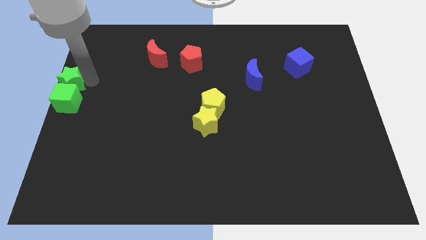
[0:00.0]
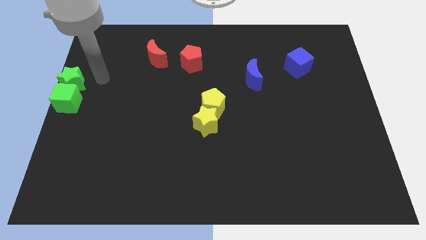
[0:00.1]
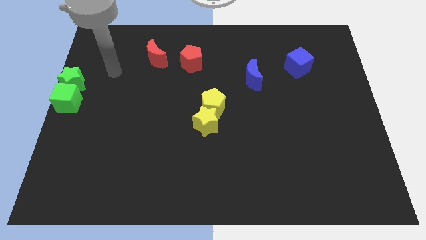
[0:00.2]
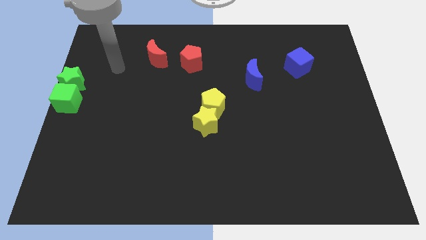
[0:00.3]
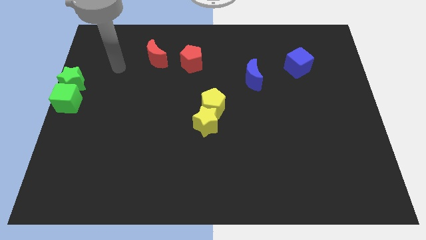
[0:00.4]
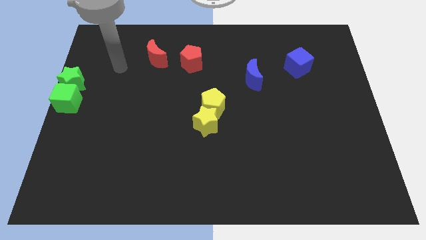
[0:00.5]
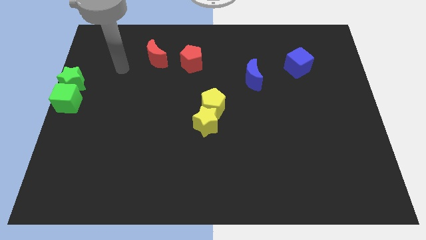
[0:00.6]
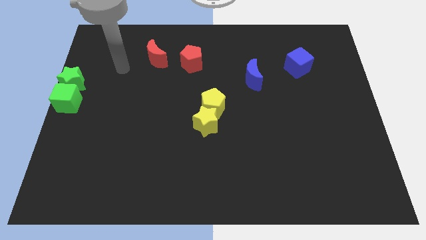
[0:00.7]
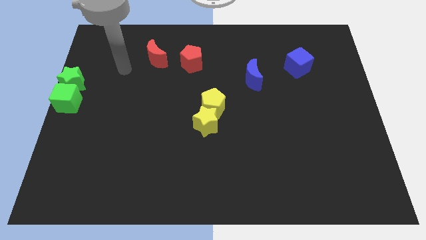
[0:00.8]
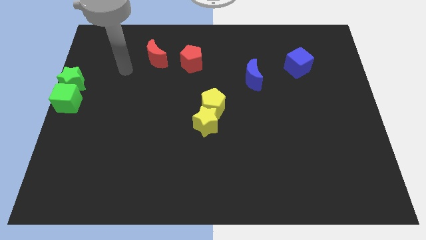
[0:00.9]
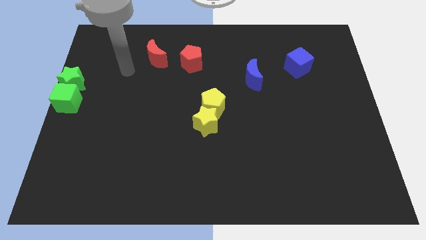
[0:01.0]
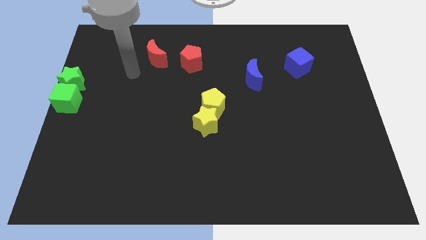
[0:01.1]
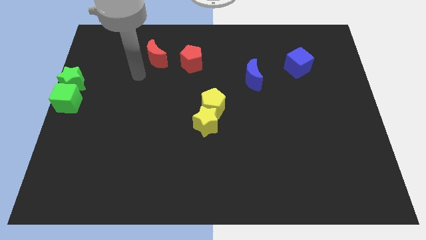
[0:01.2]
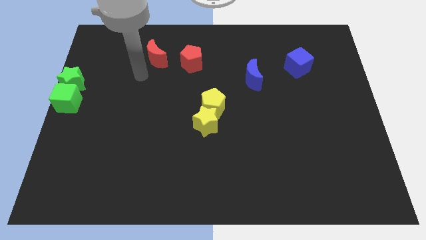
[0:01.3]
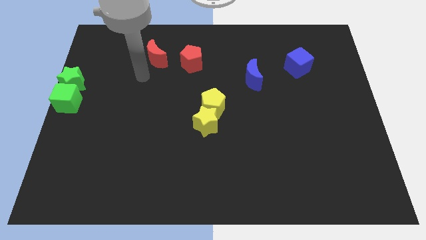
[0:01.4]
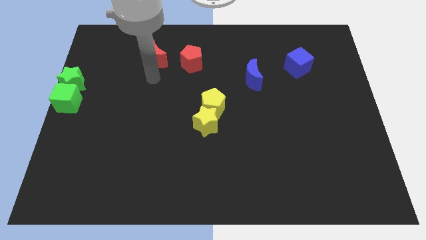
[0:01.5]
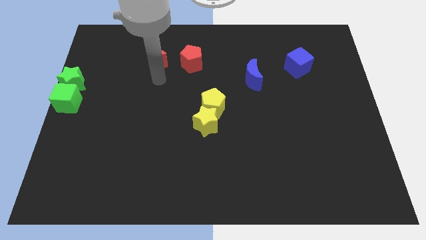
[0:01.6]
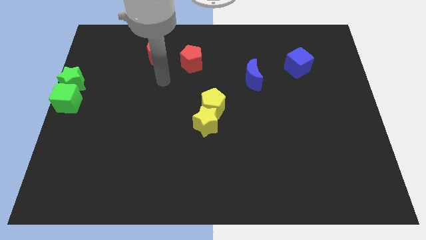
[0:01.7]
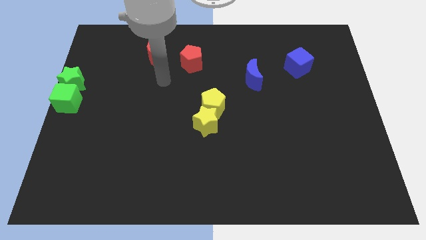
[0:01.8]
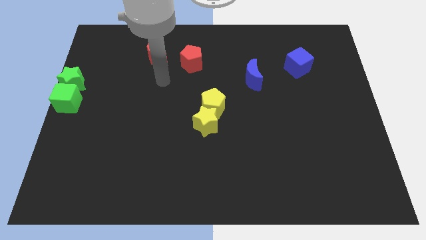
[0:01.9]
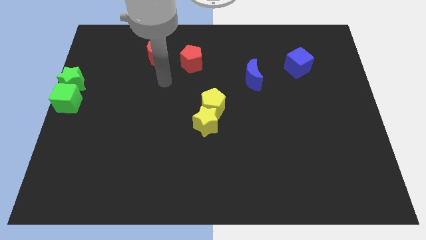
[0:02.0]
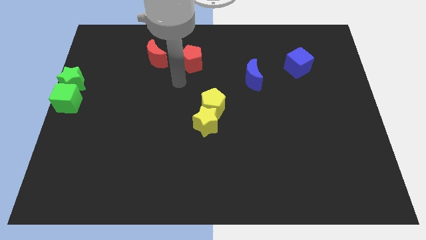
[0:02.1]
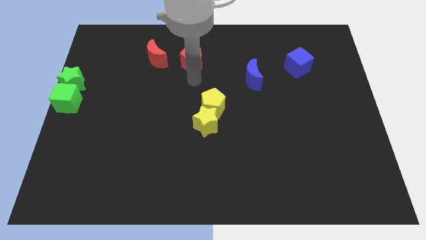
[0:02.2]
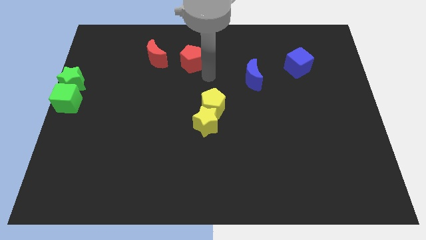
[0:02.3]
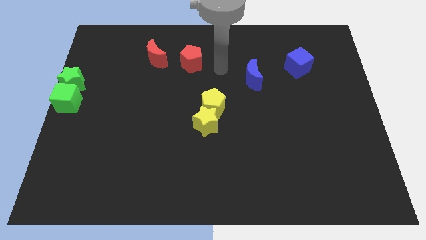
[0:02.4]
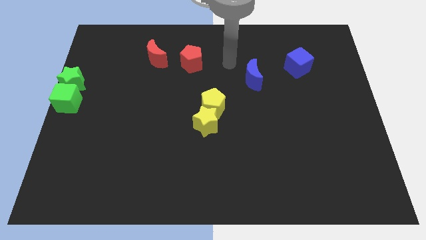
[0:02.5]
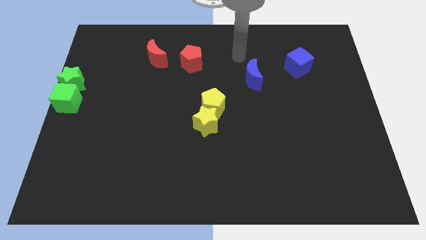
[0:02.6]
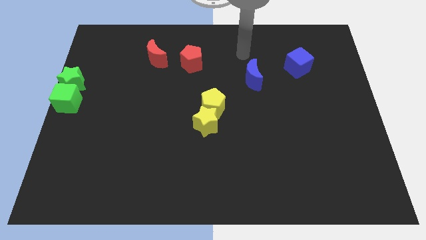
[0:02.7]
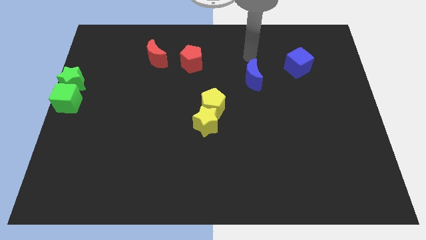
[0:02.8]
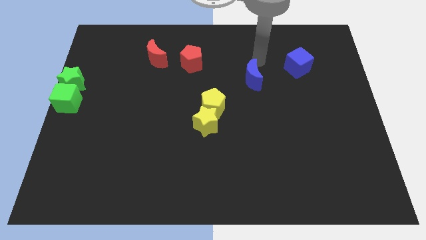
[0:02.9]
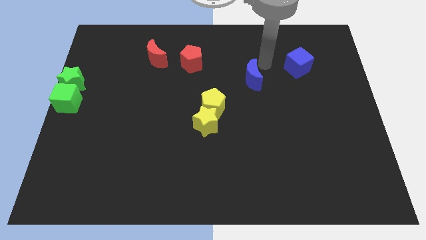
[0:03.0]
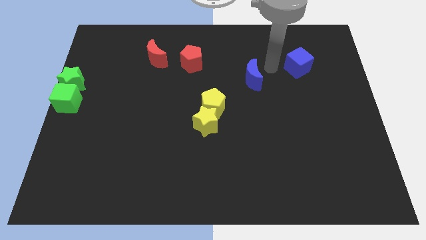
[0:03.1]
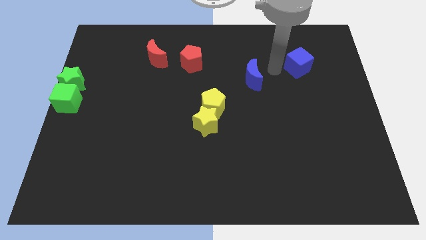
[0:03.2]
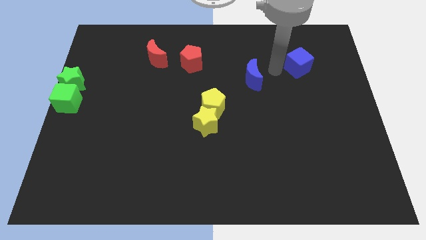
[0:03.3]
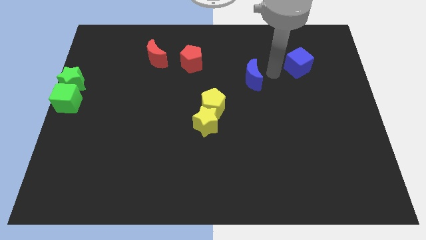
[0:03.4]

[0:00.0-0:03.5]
move arm away from the green star

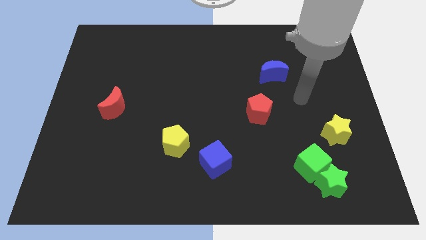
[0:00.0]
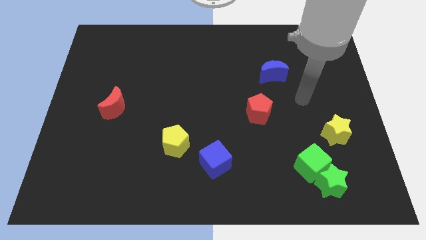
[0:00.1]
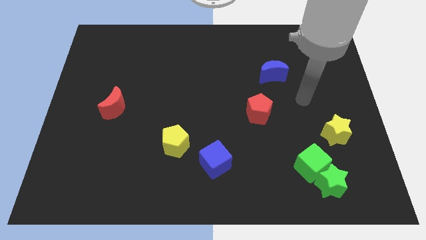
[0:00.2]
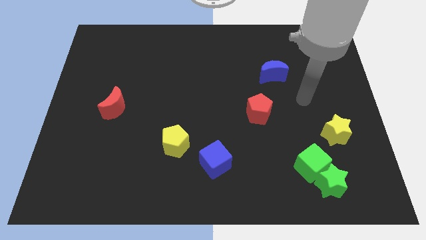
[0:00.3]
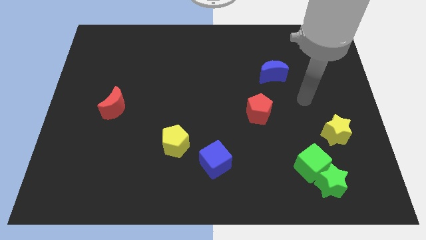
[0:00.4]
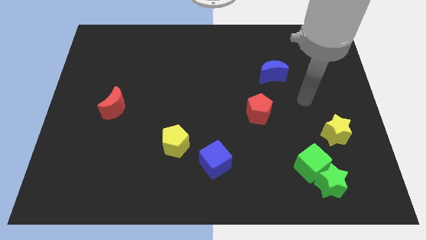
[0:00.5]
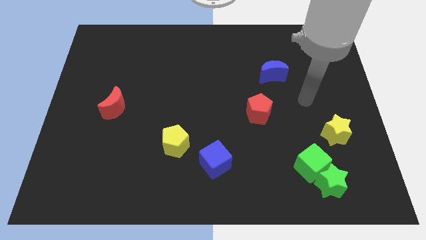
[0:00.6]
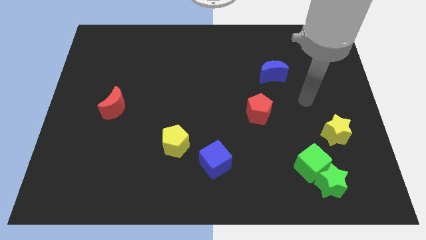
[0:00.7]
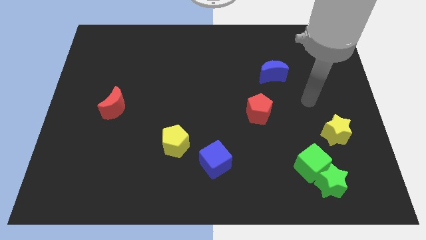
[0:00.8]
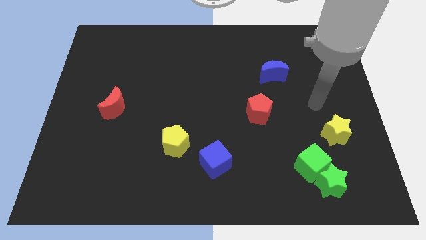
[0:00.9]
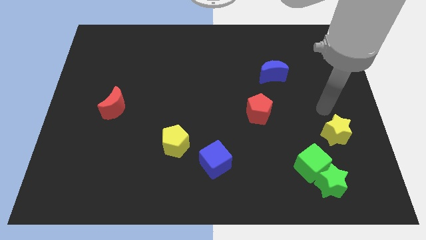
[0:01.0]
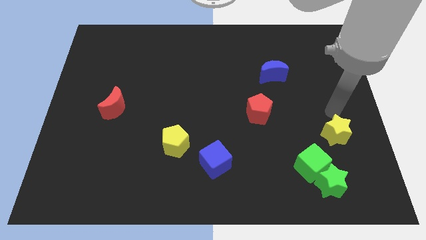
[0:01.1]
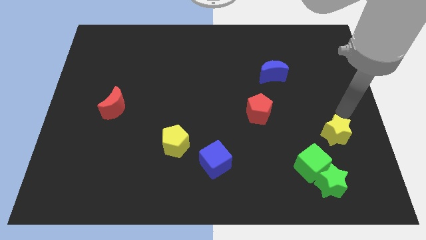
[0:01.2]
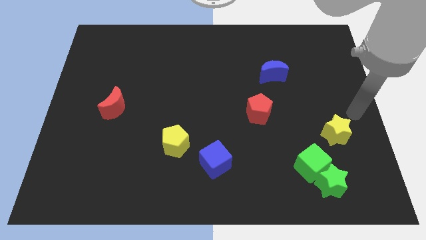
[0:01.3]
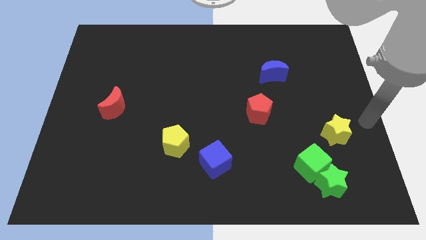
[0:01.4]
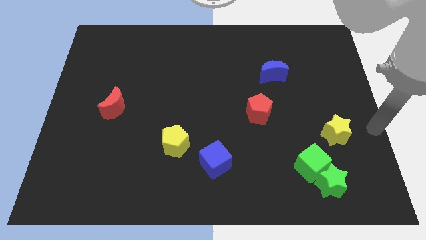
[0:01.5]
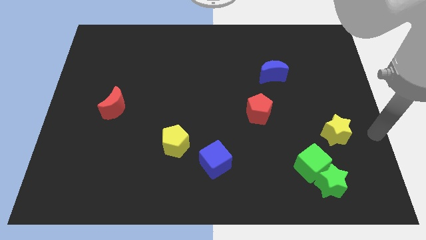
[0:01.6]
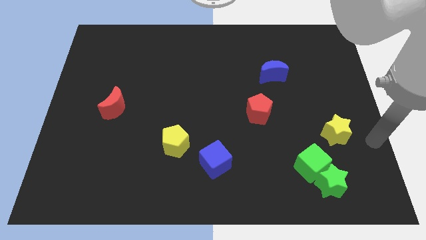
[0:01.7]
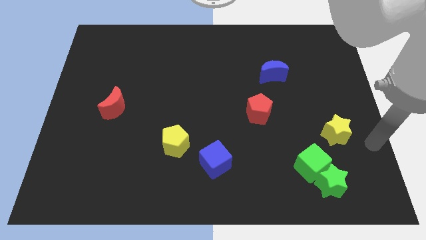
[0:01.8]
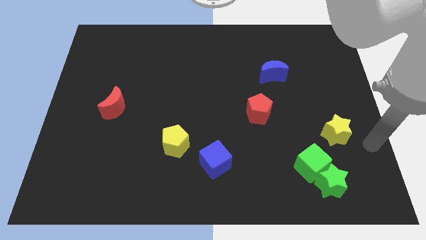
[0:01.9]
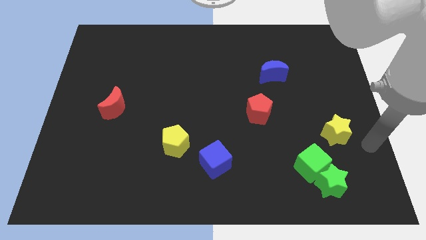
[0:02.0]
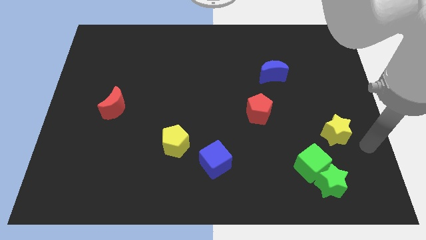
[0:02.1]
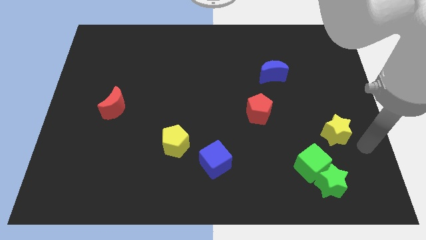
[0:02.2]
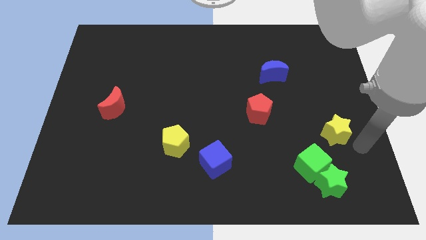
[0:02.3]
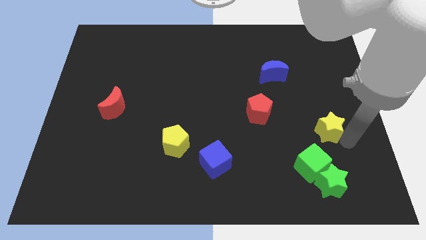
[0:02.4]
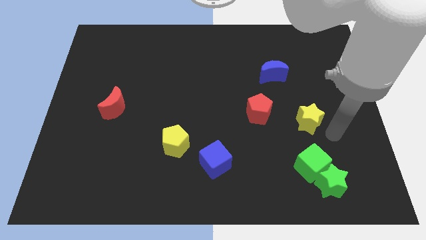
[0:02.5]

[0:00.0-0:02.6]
push the yellow star towards the red pentagon

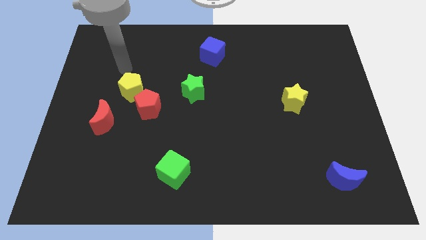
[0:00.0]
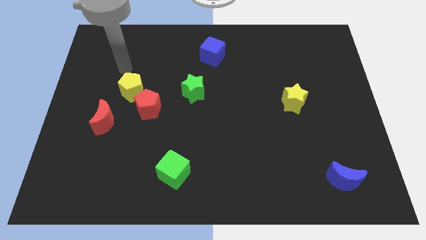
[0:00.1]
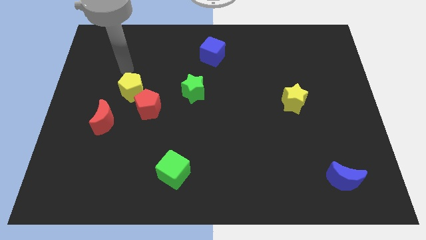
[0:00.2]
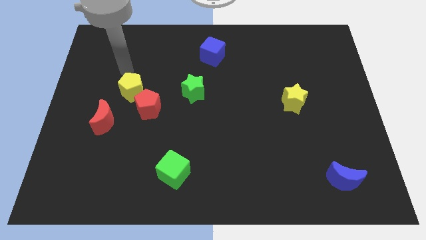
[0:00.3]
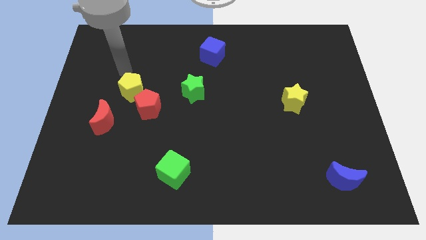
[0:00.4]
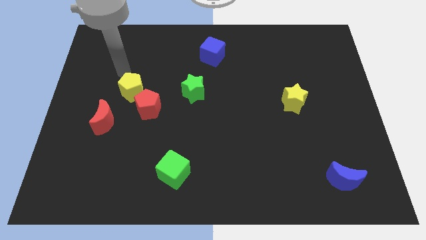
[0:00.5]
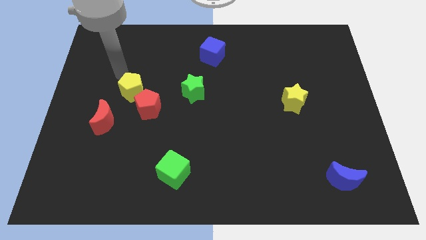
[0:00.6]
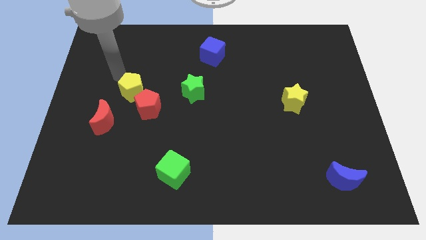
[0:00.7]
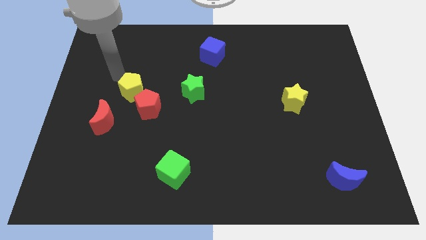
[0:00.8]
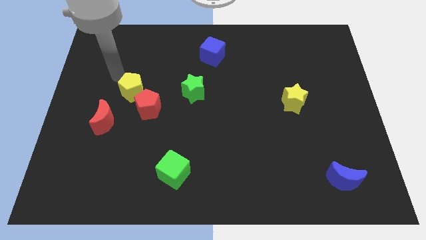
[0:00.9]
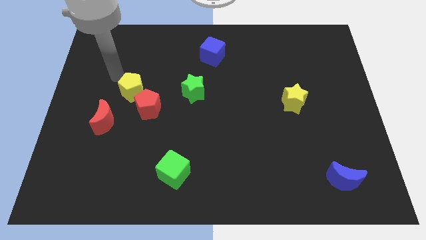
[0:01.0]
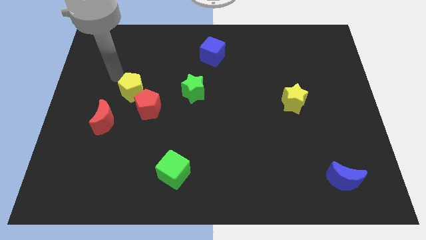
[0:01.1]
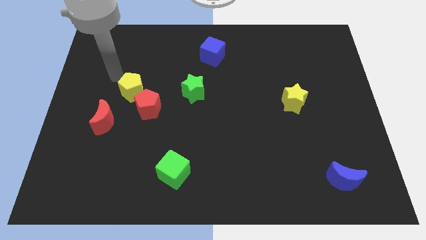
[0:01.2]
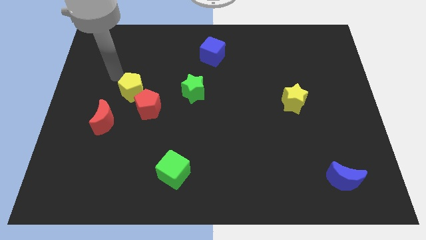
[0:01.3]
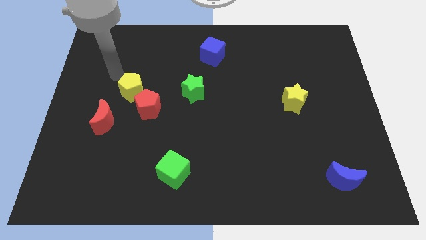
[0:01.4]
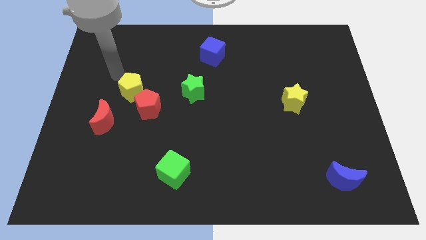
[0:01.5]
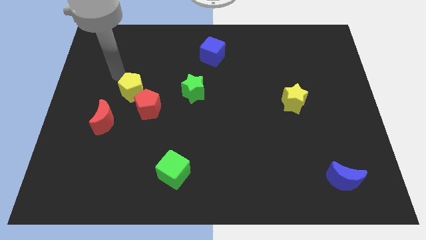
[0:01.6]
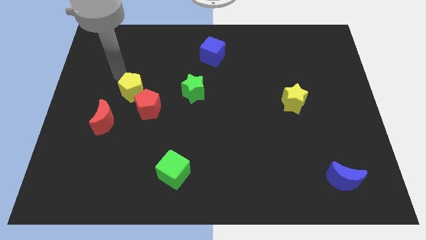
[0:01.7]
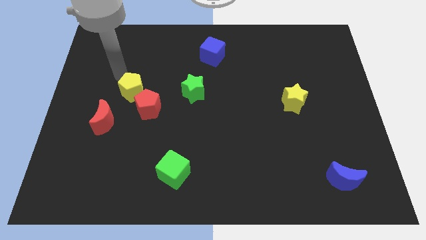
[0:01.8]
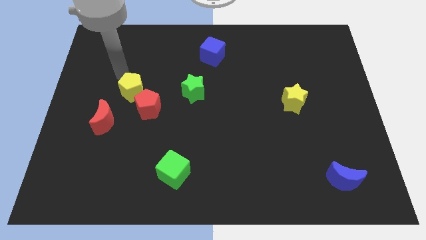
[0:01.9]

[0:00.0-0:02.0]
slightly move the arm towards the yellow pentagon

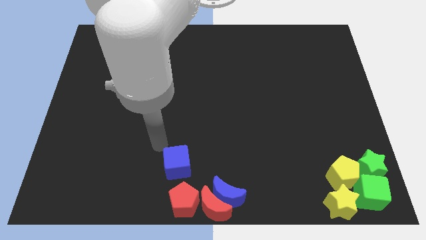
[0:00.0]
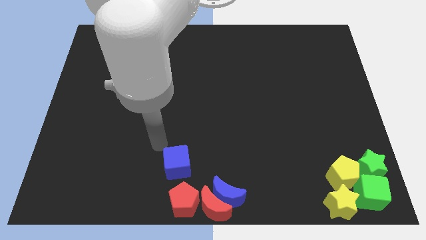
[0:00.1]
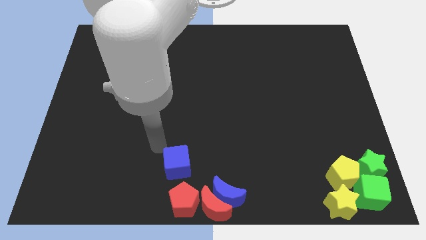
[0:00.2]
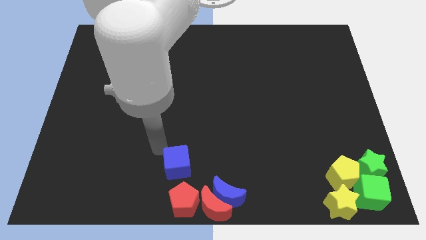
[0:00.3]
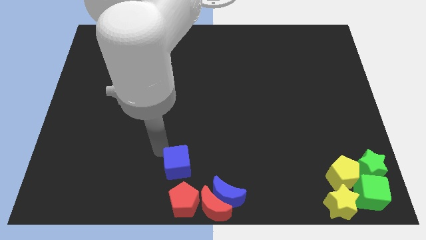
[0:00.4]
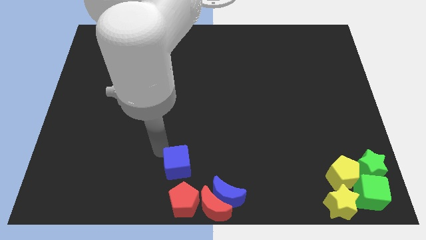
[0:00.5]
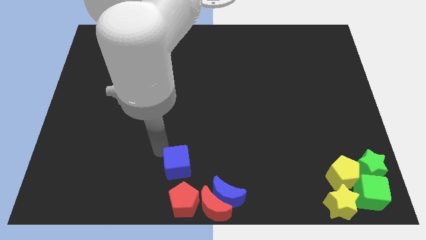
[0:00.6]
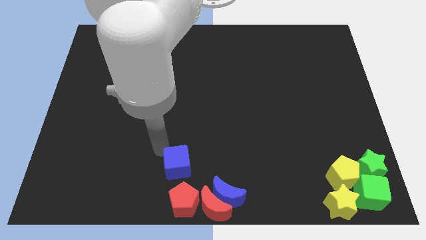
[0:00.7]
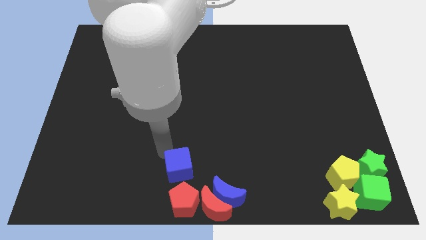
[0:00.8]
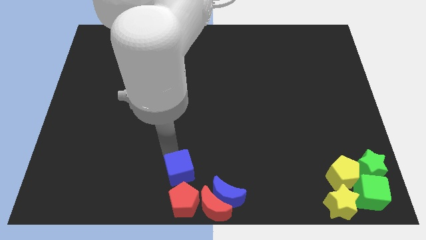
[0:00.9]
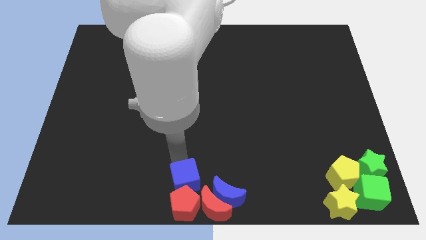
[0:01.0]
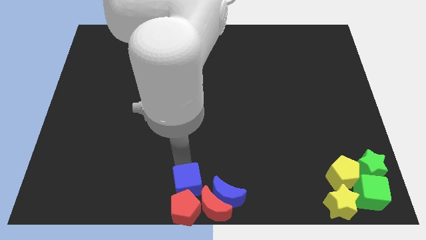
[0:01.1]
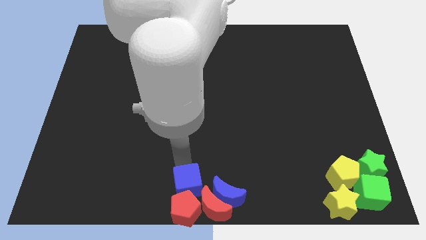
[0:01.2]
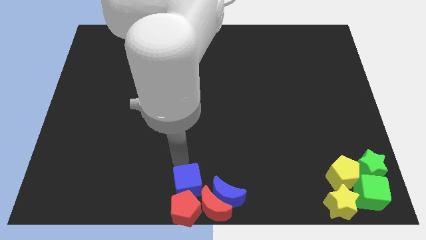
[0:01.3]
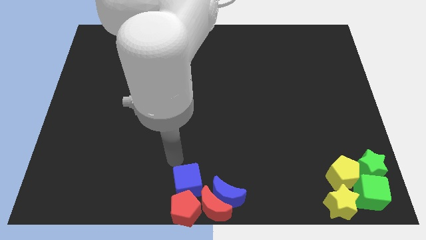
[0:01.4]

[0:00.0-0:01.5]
slide the blue cube into the red pentagon
